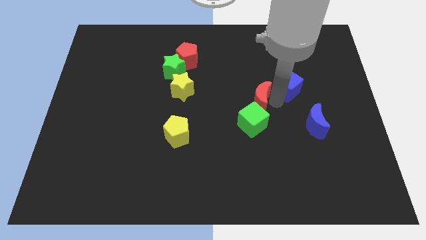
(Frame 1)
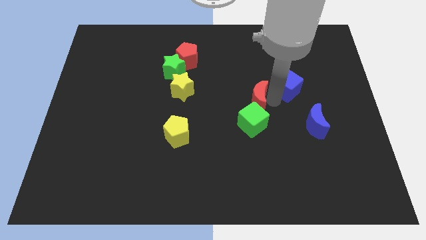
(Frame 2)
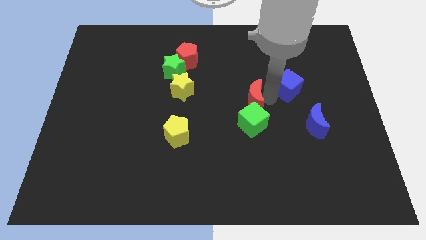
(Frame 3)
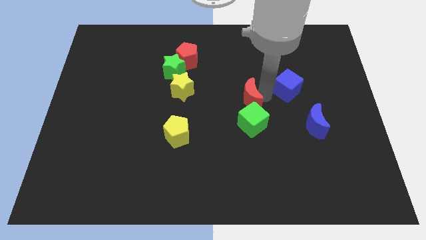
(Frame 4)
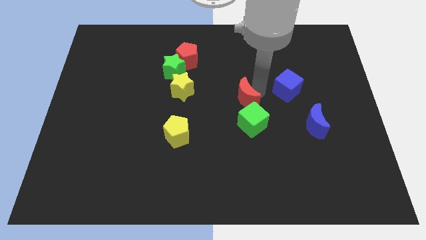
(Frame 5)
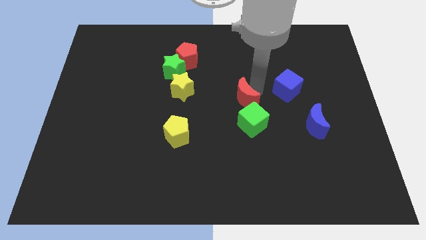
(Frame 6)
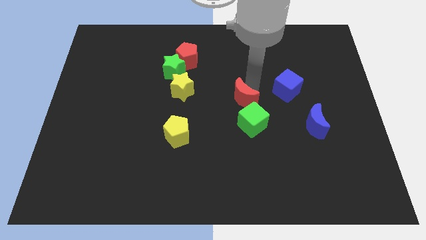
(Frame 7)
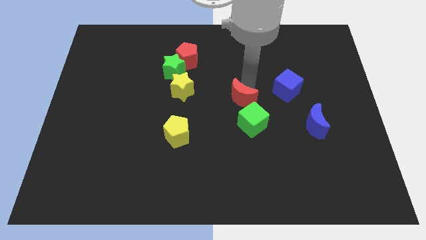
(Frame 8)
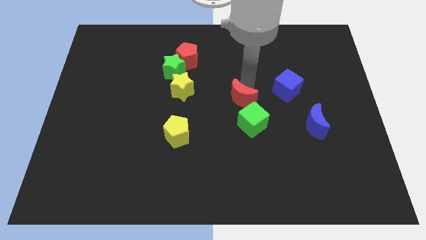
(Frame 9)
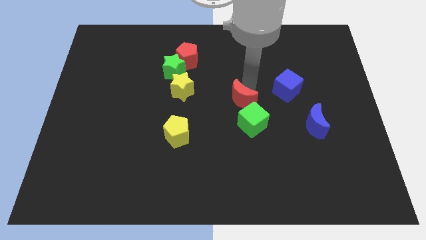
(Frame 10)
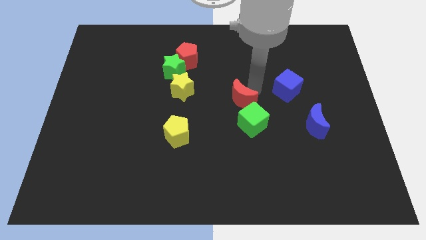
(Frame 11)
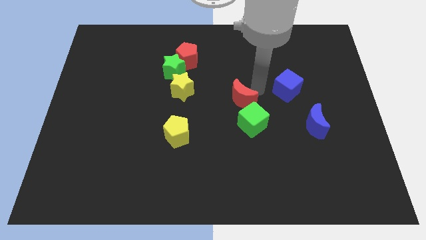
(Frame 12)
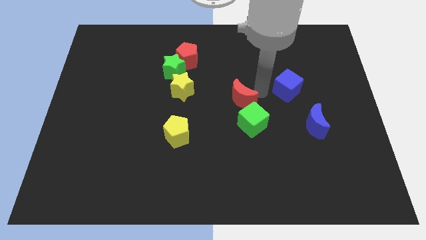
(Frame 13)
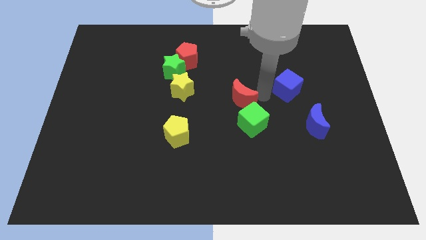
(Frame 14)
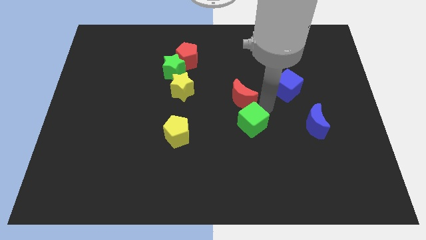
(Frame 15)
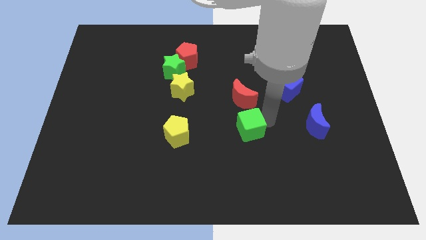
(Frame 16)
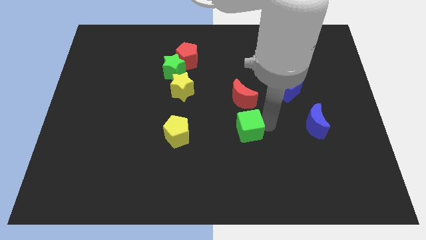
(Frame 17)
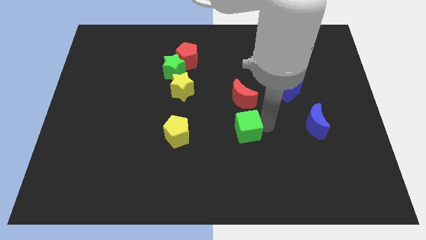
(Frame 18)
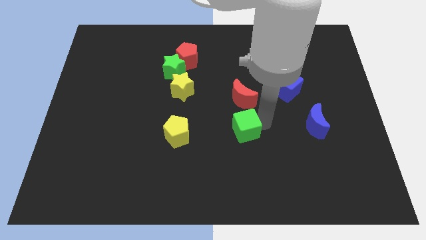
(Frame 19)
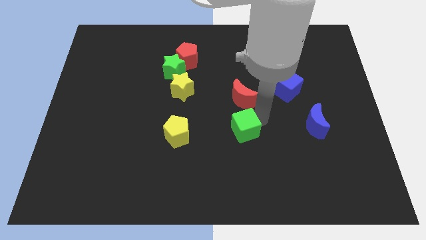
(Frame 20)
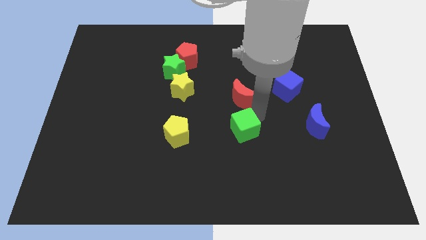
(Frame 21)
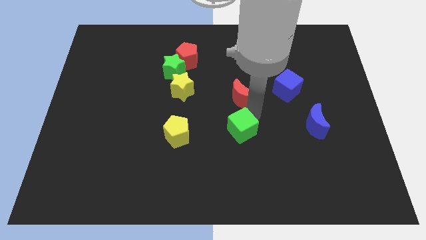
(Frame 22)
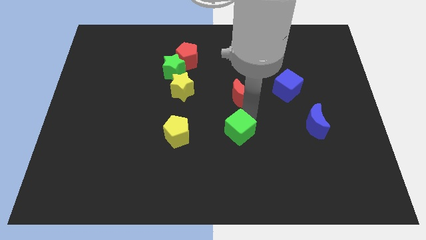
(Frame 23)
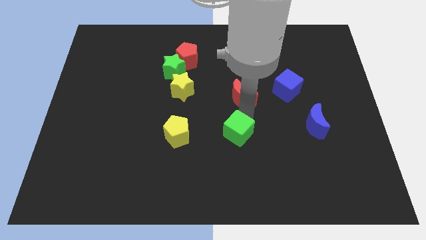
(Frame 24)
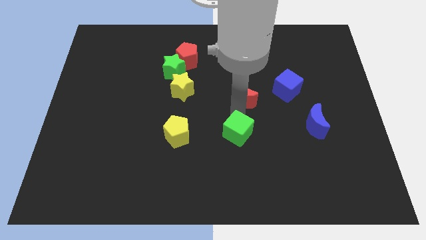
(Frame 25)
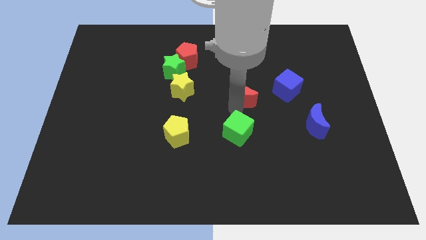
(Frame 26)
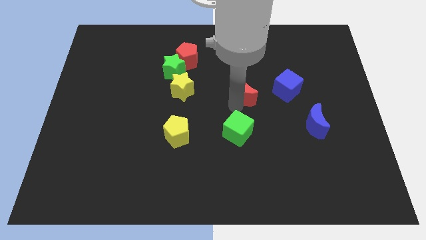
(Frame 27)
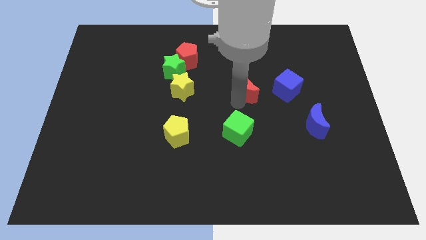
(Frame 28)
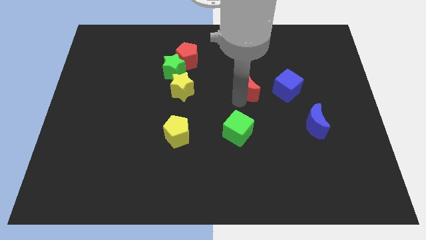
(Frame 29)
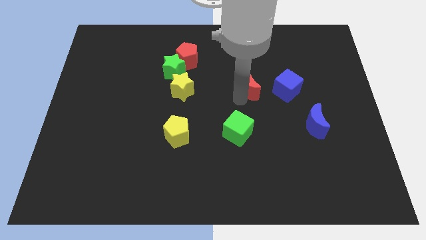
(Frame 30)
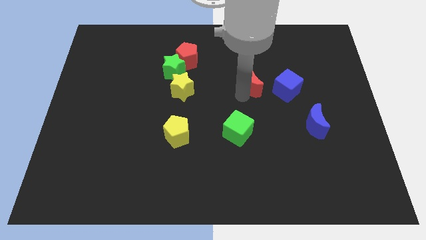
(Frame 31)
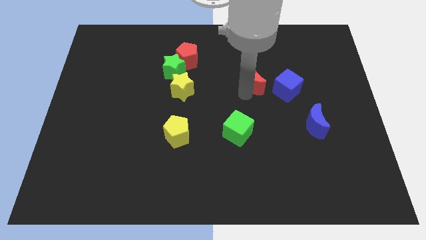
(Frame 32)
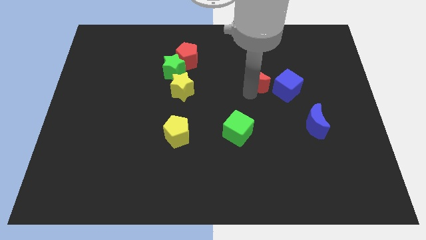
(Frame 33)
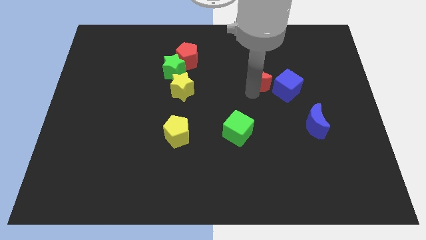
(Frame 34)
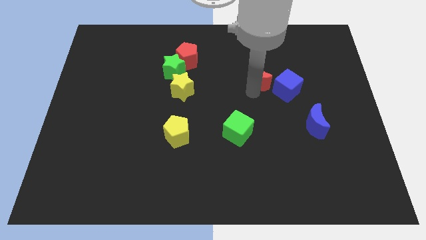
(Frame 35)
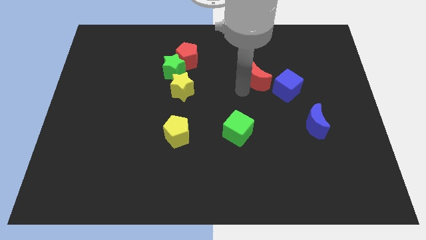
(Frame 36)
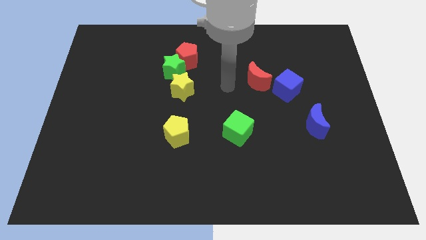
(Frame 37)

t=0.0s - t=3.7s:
separate the red crescent and the green cube

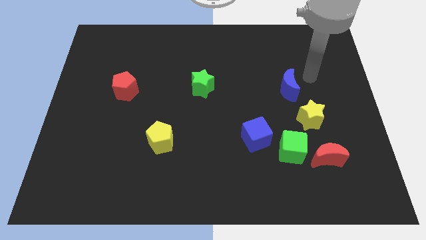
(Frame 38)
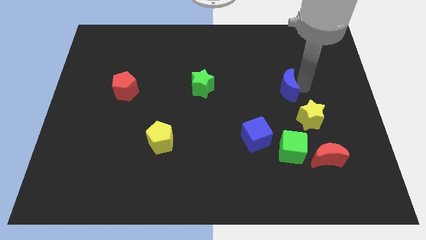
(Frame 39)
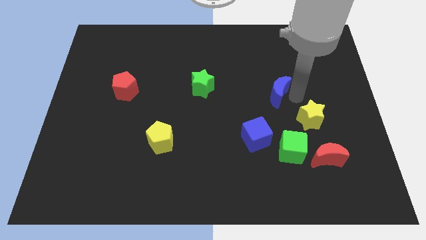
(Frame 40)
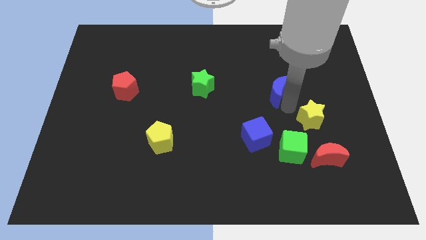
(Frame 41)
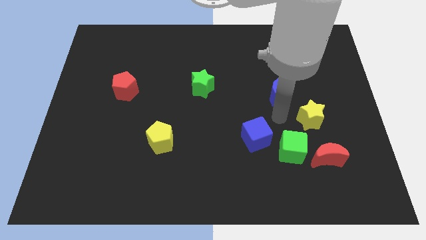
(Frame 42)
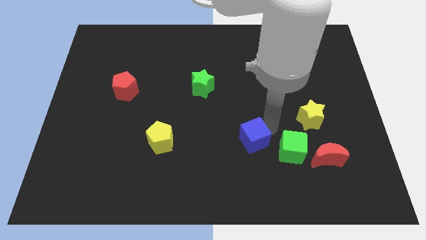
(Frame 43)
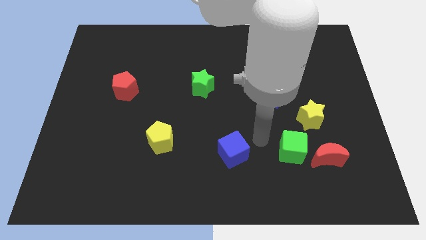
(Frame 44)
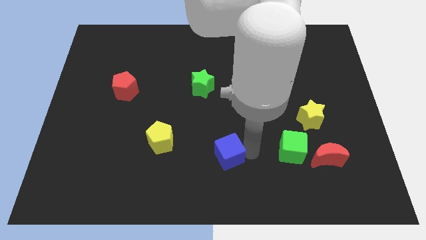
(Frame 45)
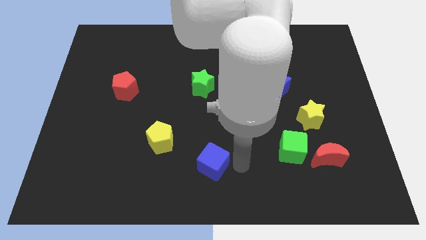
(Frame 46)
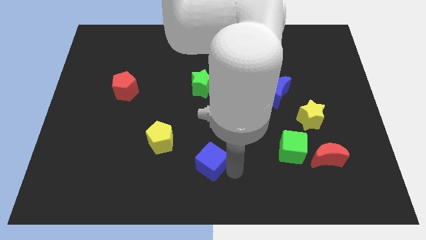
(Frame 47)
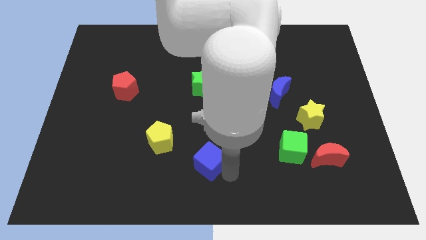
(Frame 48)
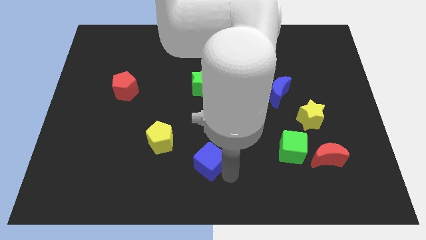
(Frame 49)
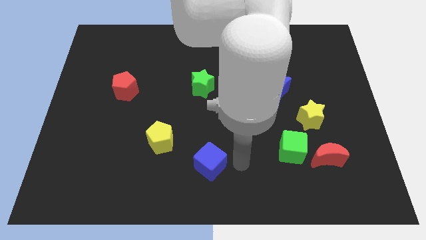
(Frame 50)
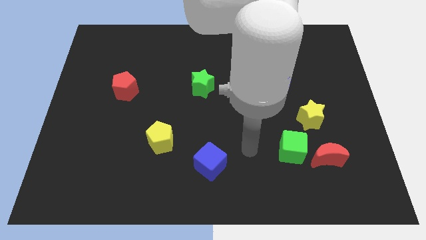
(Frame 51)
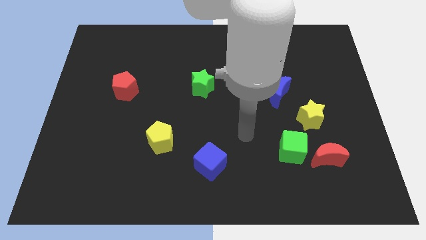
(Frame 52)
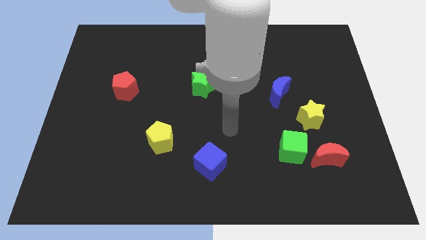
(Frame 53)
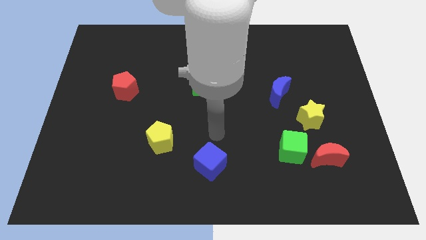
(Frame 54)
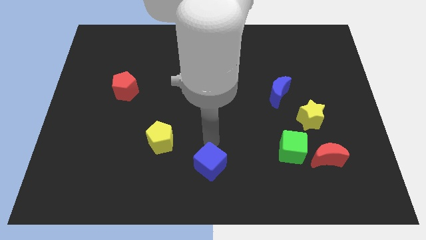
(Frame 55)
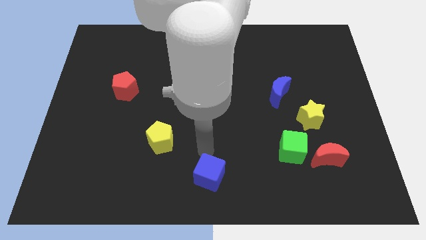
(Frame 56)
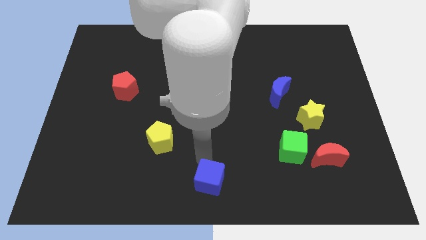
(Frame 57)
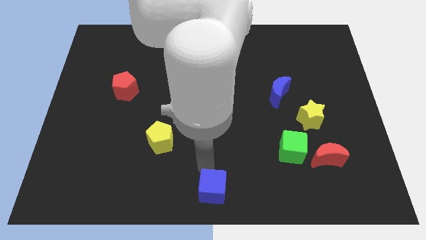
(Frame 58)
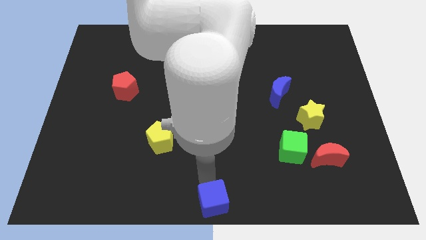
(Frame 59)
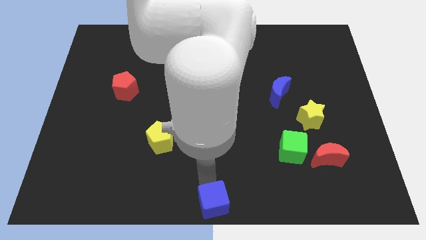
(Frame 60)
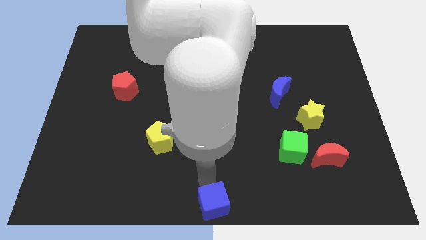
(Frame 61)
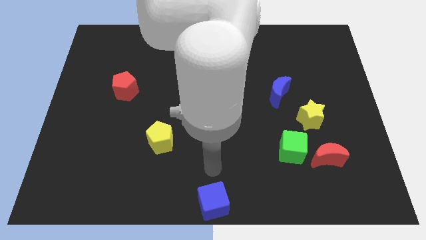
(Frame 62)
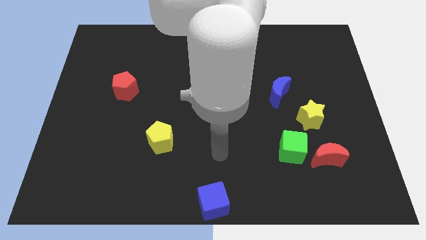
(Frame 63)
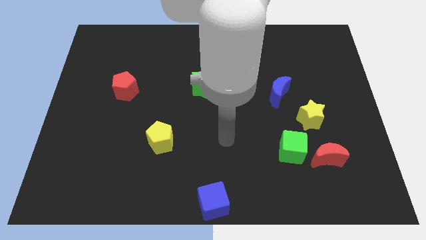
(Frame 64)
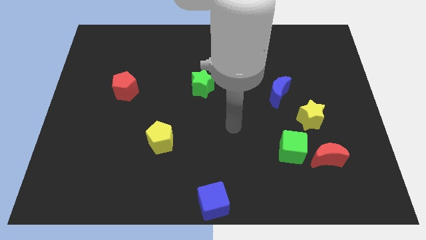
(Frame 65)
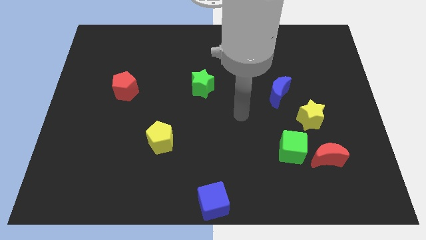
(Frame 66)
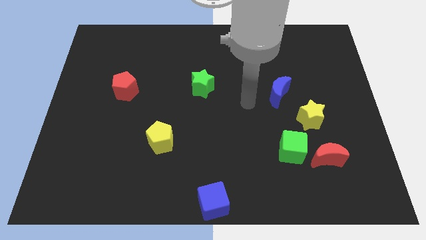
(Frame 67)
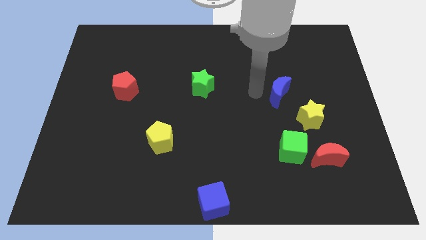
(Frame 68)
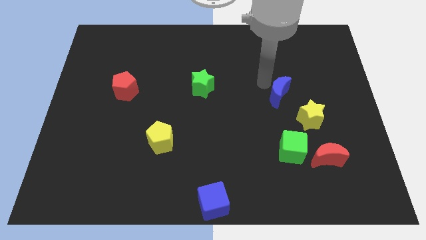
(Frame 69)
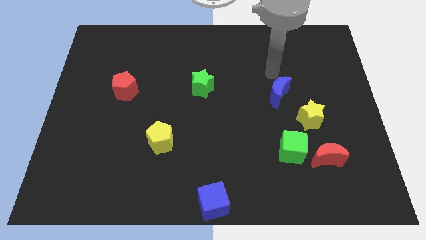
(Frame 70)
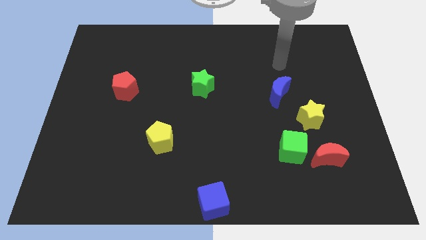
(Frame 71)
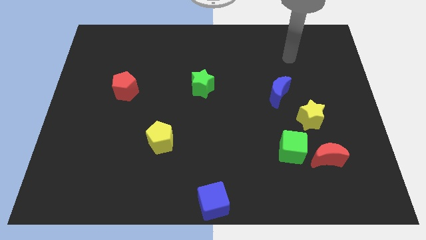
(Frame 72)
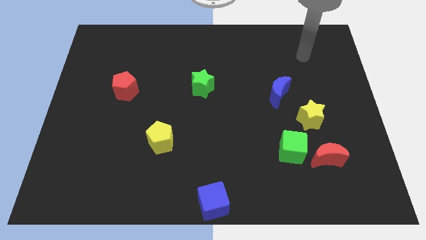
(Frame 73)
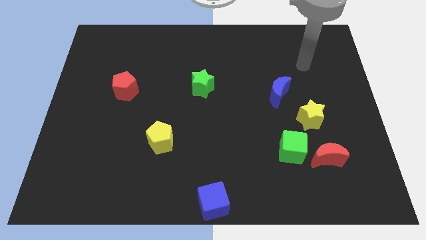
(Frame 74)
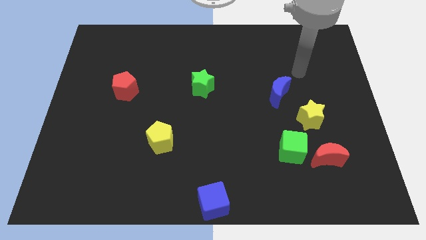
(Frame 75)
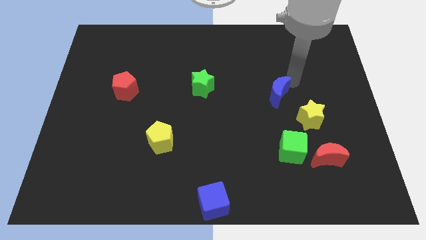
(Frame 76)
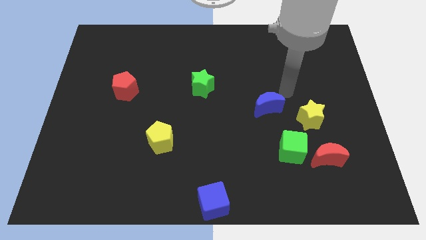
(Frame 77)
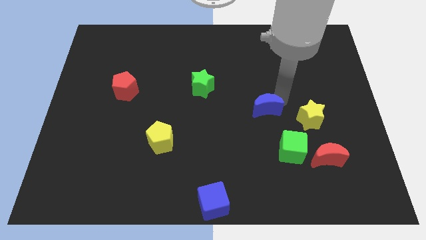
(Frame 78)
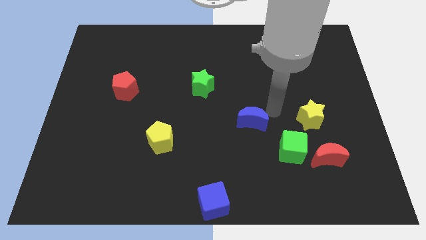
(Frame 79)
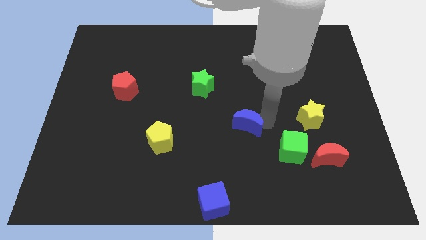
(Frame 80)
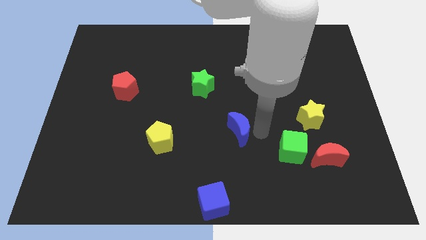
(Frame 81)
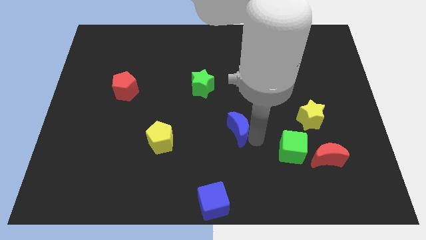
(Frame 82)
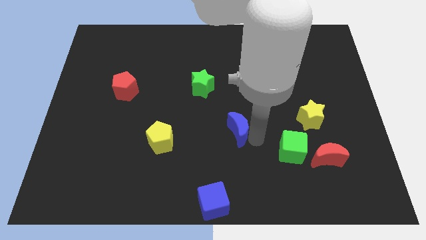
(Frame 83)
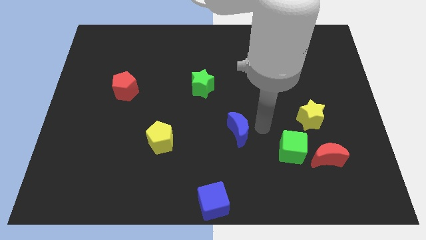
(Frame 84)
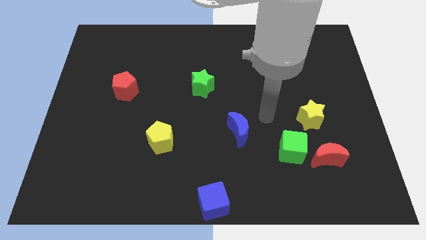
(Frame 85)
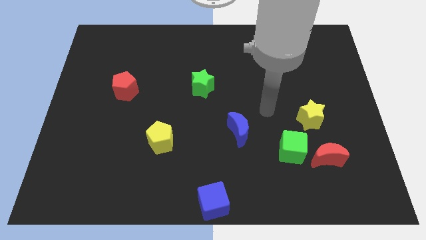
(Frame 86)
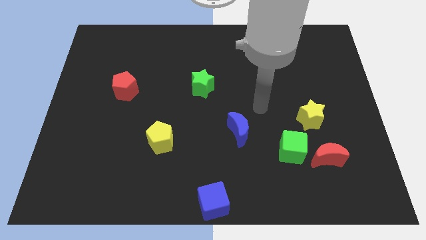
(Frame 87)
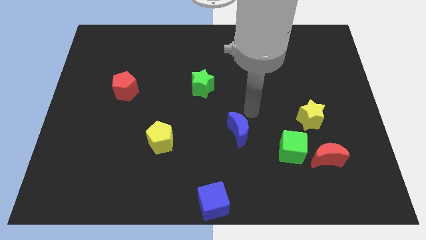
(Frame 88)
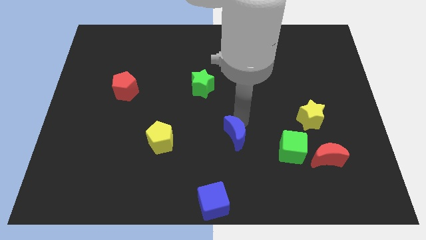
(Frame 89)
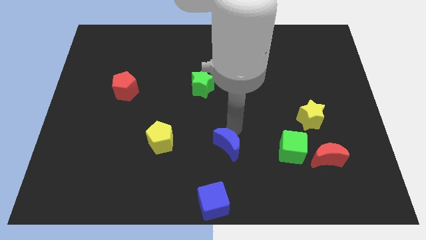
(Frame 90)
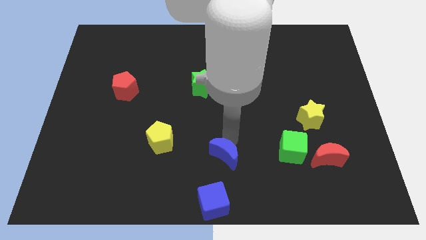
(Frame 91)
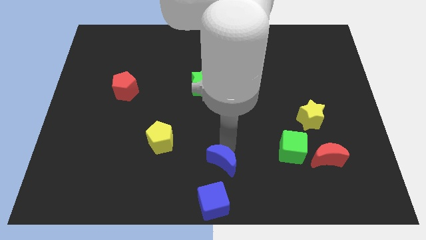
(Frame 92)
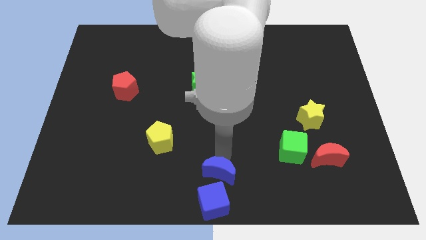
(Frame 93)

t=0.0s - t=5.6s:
place the blue blocks at the bottom center of the board
